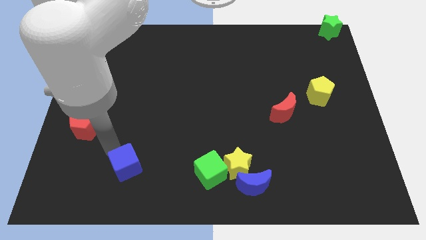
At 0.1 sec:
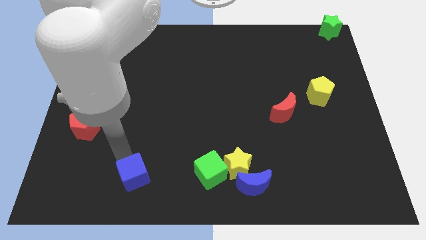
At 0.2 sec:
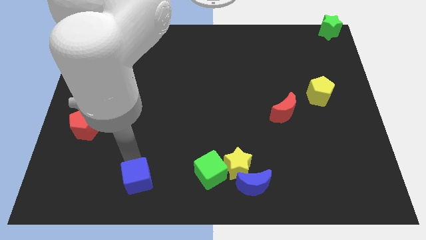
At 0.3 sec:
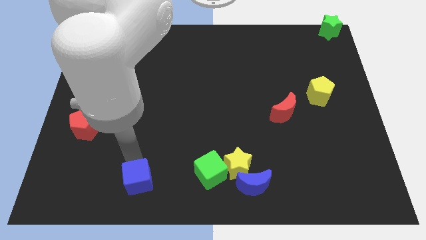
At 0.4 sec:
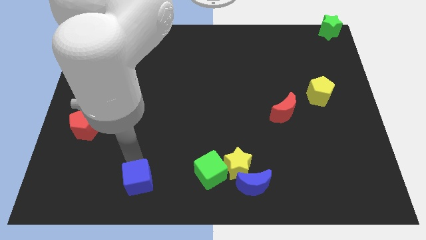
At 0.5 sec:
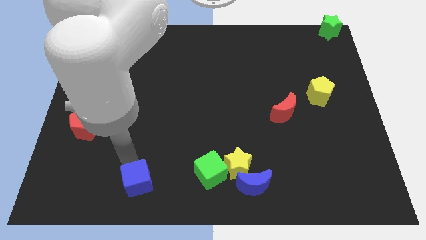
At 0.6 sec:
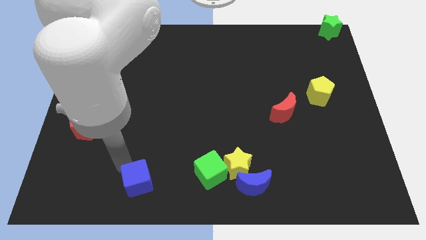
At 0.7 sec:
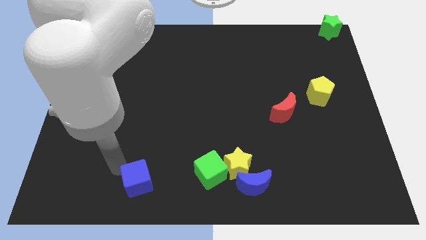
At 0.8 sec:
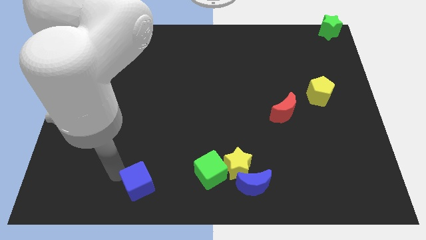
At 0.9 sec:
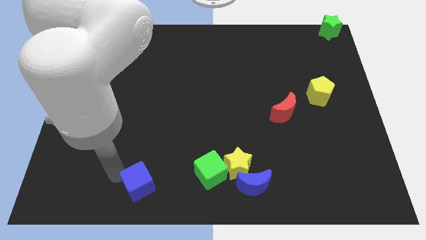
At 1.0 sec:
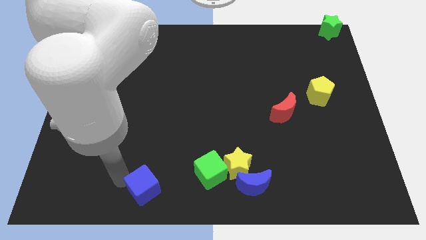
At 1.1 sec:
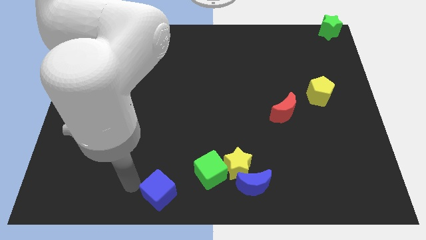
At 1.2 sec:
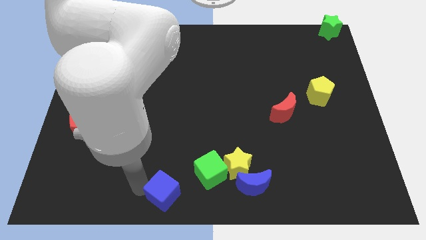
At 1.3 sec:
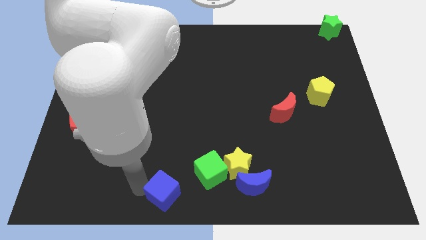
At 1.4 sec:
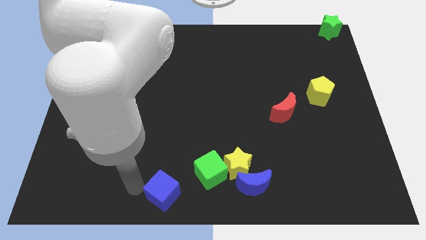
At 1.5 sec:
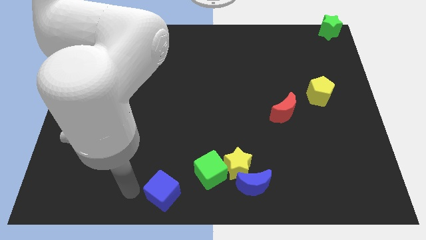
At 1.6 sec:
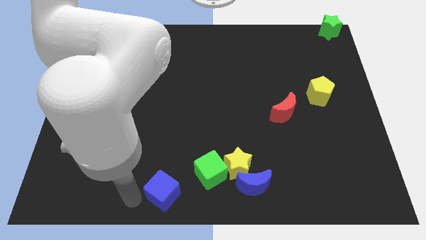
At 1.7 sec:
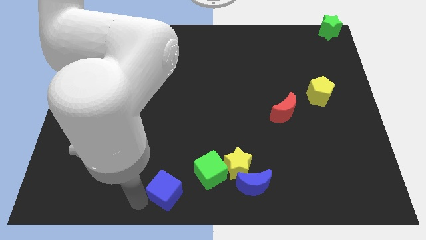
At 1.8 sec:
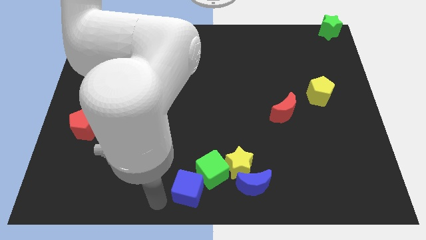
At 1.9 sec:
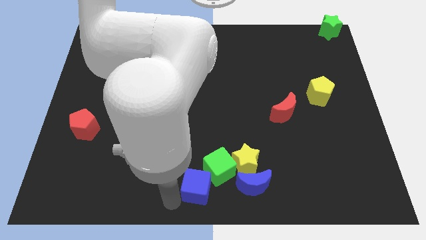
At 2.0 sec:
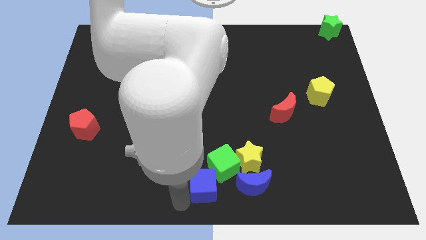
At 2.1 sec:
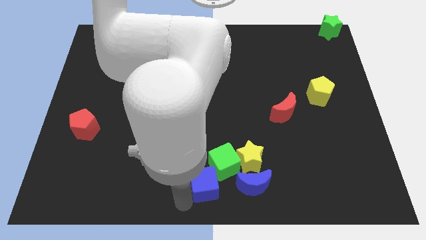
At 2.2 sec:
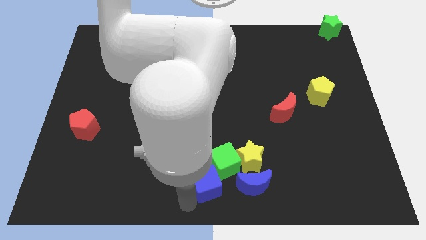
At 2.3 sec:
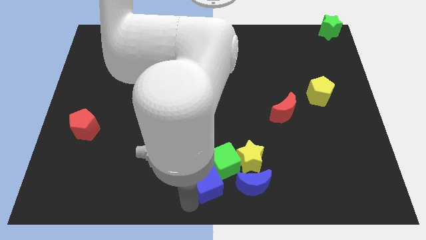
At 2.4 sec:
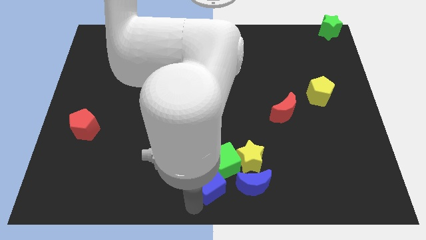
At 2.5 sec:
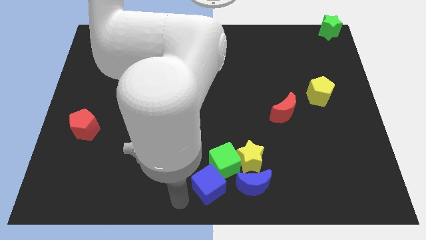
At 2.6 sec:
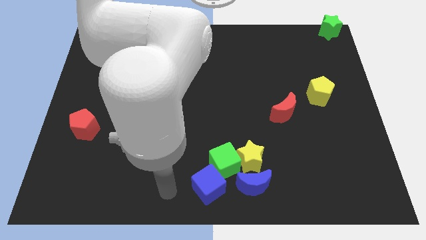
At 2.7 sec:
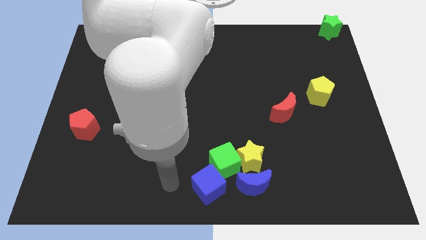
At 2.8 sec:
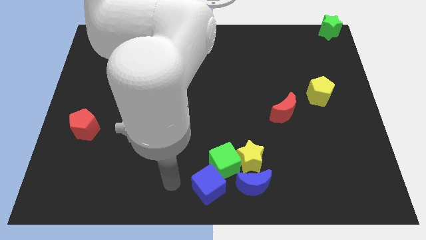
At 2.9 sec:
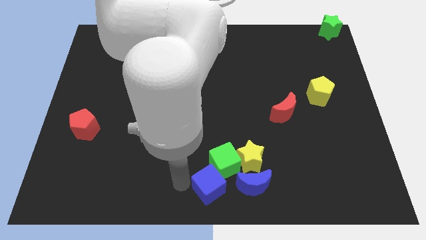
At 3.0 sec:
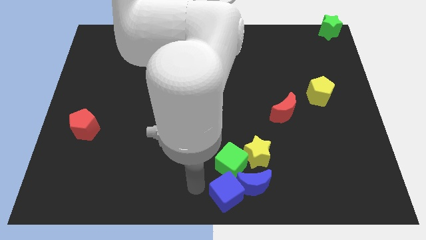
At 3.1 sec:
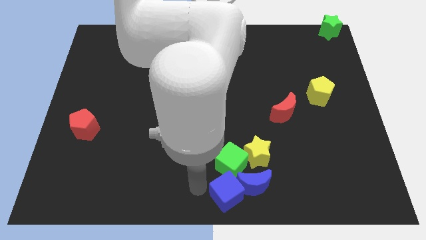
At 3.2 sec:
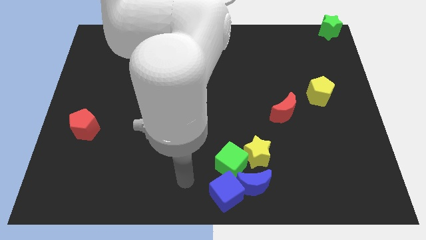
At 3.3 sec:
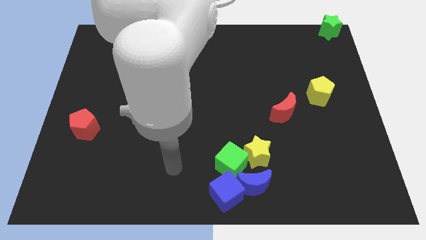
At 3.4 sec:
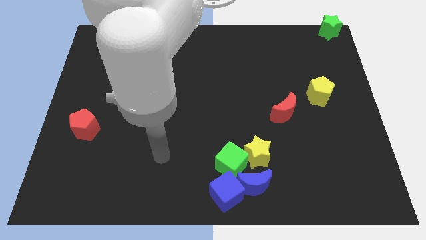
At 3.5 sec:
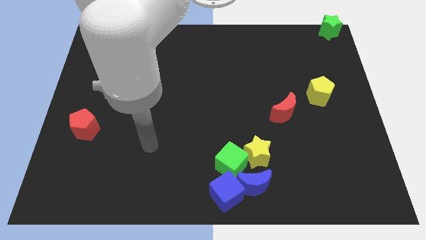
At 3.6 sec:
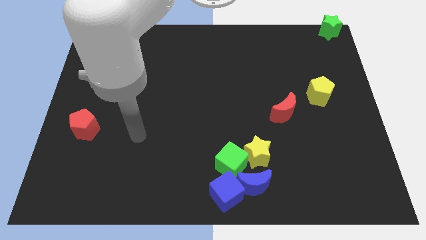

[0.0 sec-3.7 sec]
place blue cube into the bottom of green cube

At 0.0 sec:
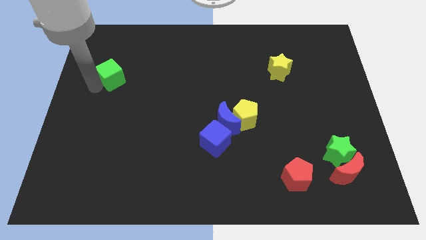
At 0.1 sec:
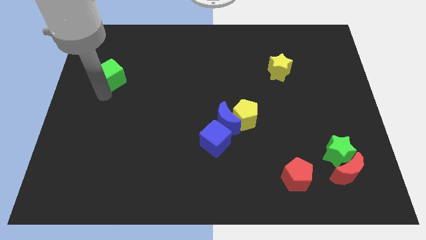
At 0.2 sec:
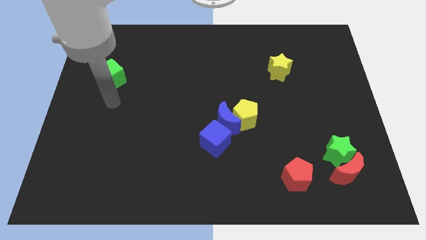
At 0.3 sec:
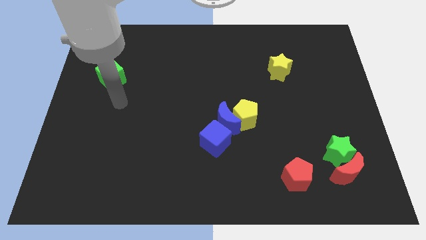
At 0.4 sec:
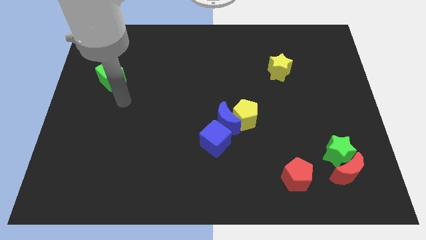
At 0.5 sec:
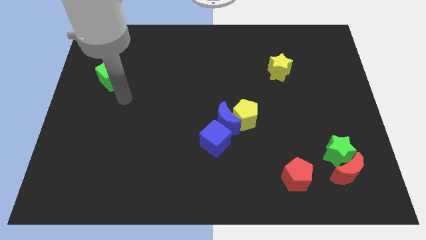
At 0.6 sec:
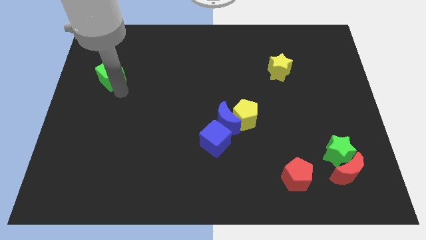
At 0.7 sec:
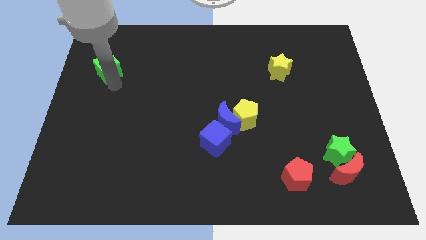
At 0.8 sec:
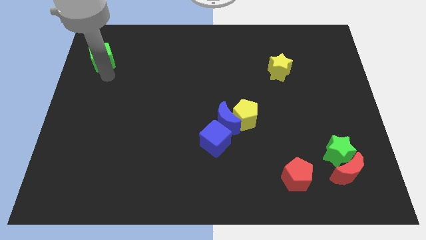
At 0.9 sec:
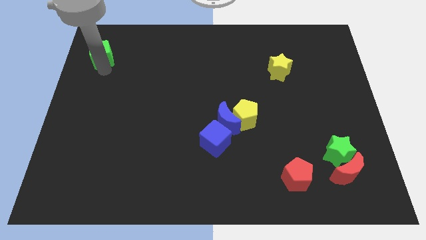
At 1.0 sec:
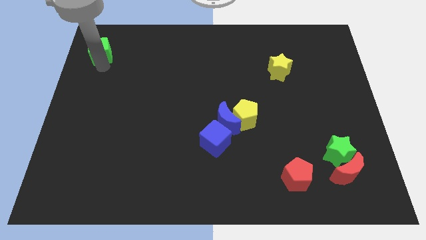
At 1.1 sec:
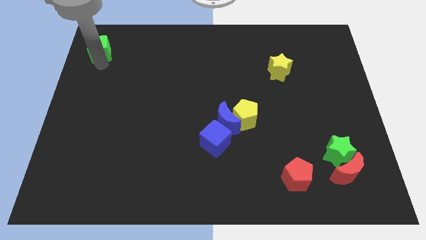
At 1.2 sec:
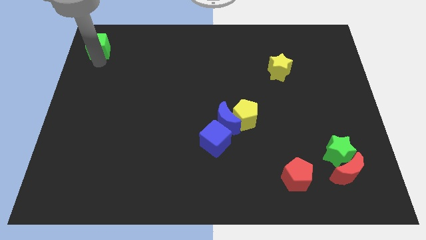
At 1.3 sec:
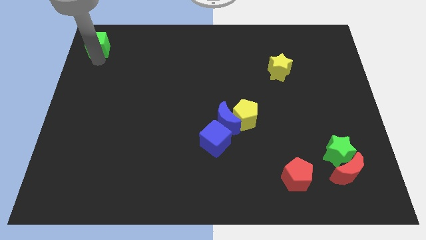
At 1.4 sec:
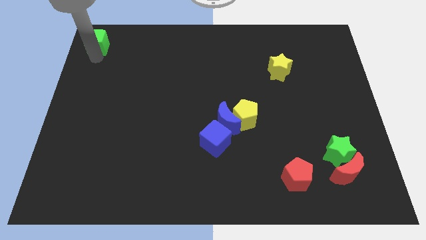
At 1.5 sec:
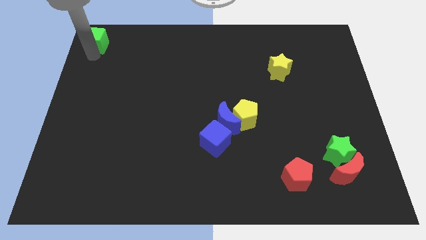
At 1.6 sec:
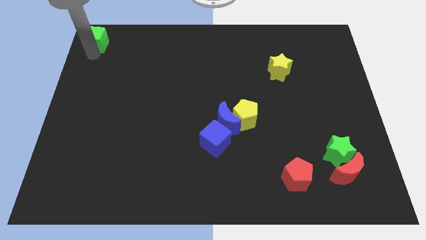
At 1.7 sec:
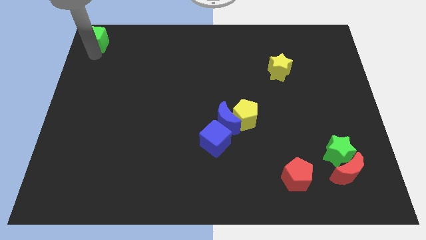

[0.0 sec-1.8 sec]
move the green cube to the top left corner of the board

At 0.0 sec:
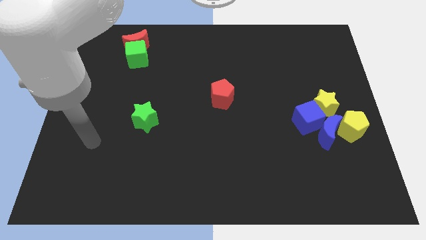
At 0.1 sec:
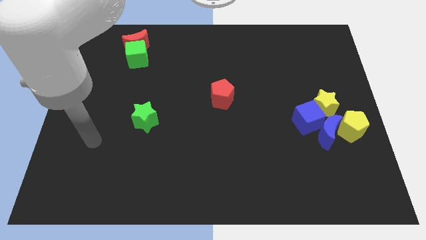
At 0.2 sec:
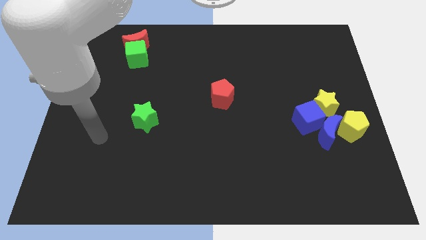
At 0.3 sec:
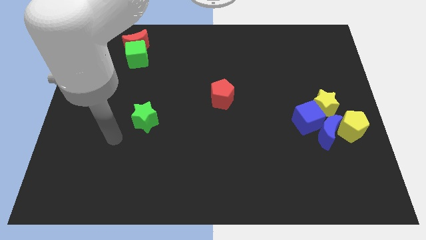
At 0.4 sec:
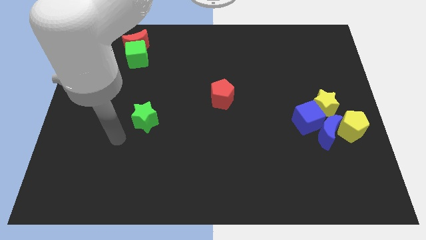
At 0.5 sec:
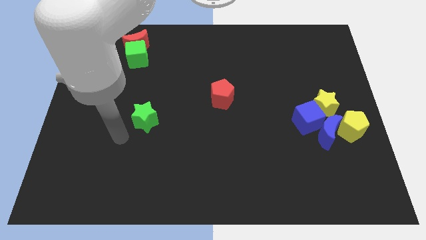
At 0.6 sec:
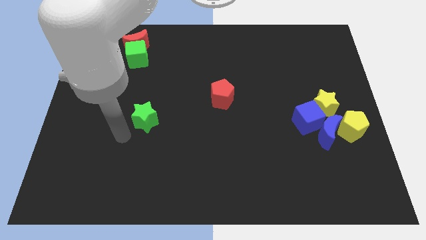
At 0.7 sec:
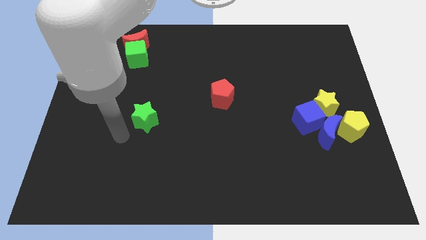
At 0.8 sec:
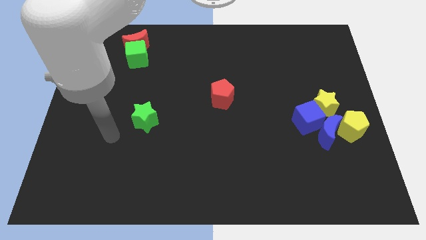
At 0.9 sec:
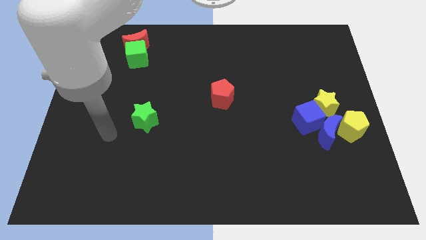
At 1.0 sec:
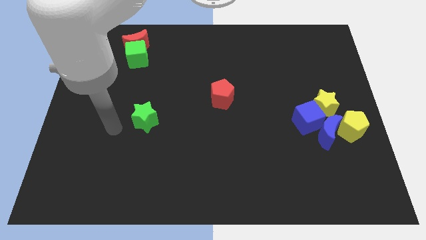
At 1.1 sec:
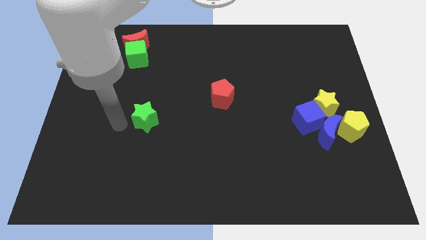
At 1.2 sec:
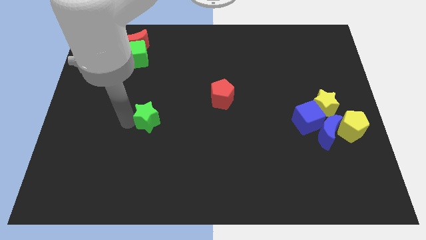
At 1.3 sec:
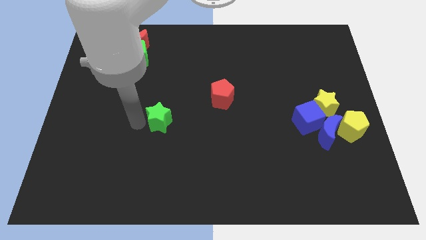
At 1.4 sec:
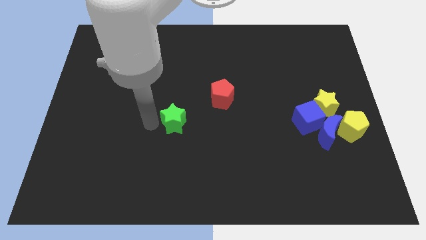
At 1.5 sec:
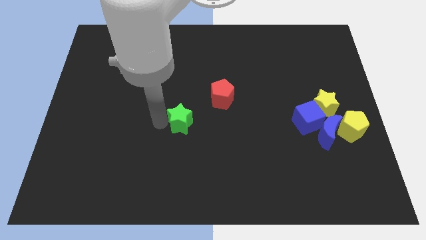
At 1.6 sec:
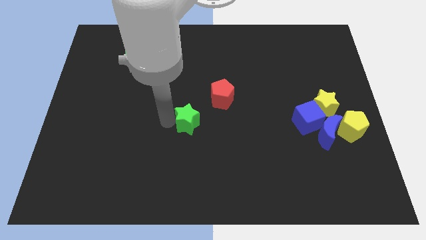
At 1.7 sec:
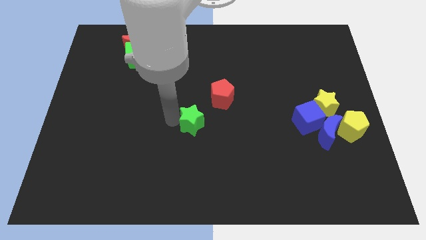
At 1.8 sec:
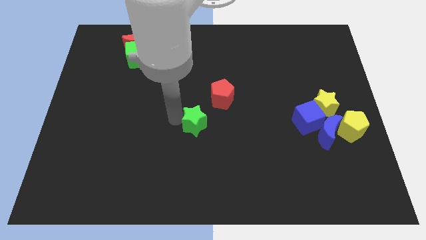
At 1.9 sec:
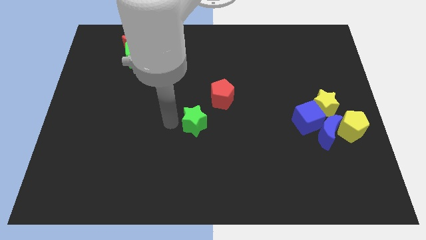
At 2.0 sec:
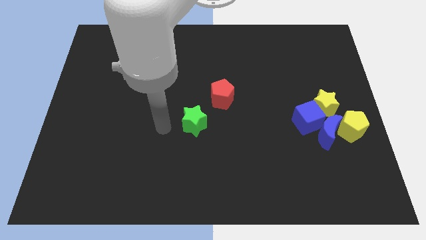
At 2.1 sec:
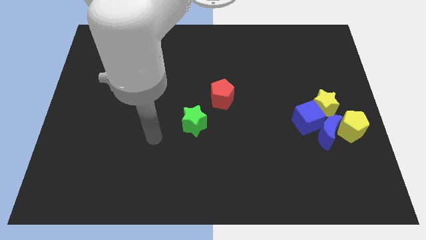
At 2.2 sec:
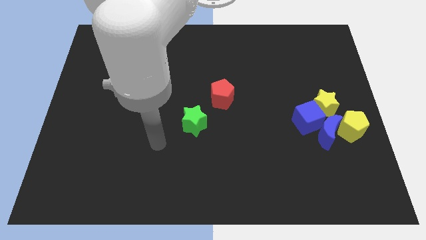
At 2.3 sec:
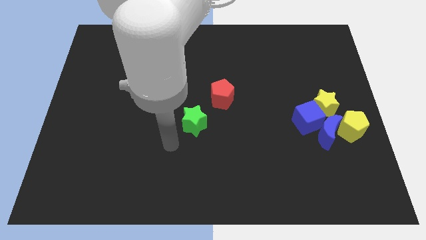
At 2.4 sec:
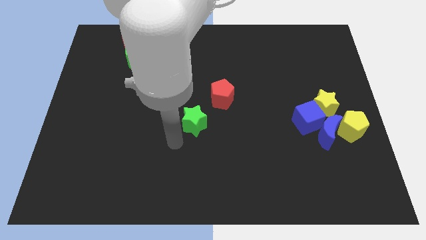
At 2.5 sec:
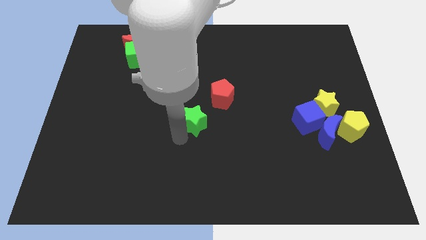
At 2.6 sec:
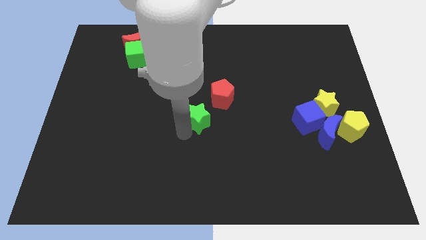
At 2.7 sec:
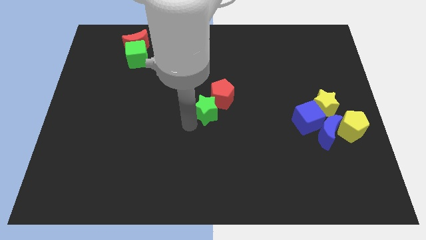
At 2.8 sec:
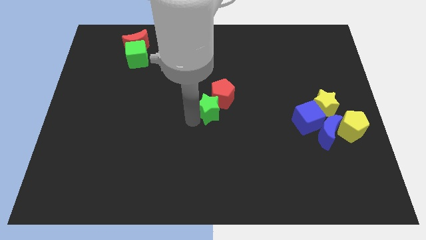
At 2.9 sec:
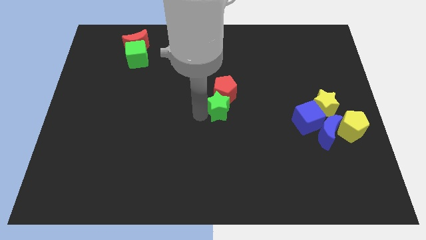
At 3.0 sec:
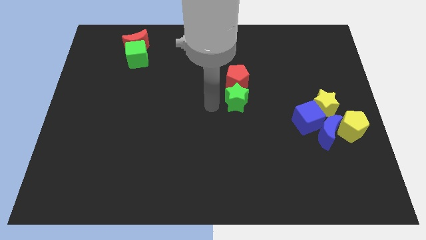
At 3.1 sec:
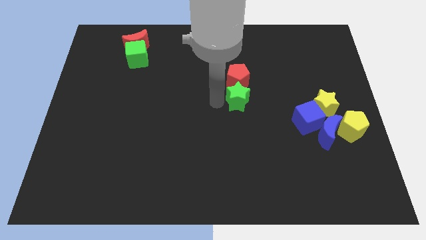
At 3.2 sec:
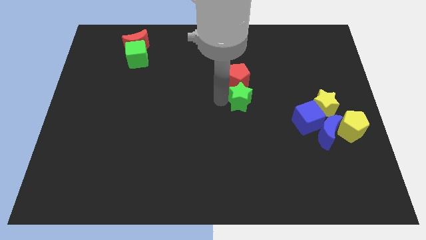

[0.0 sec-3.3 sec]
push the green star into the red pentagon

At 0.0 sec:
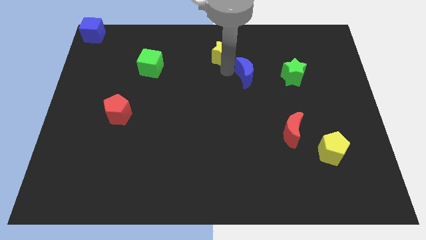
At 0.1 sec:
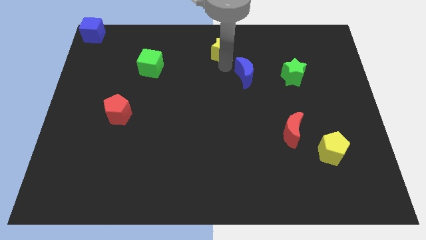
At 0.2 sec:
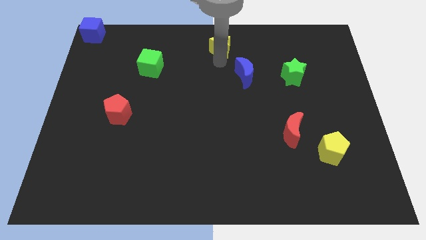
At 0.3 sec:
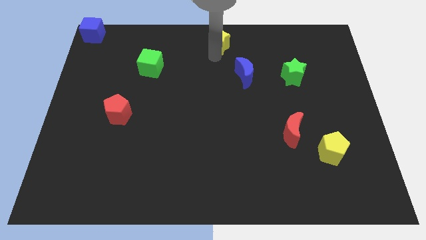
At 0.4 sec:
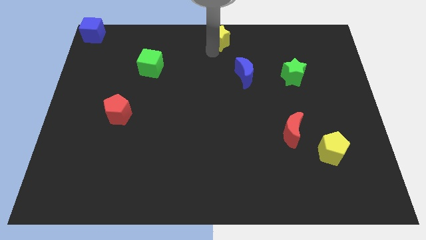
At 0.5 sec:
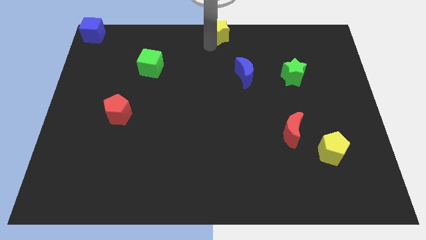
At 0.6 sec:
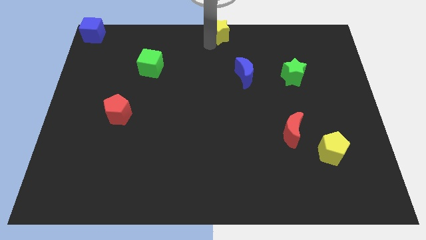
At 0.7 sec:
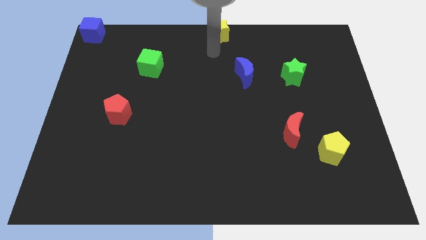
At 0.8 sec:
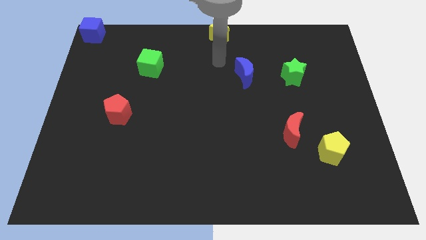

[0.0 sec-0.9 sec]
place the yellow star at the top center of the board
